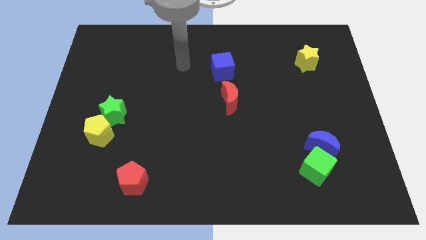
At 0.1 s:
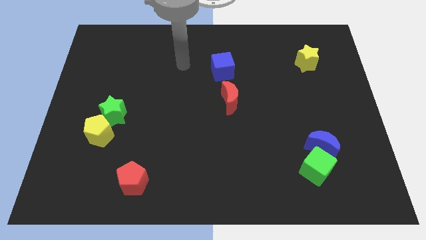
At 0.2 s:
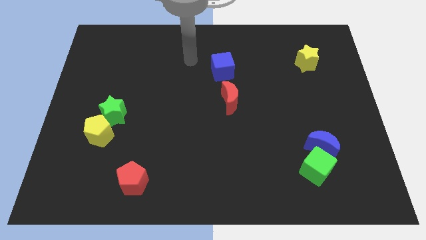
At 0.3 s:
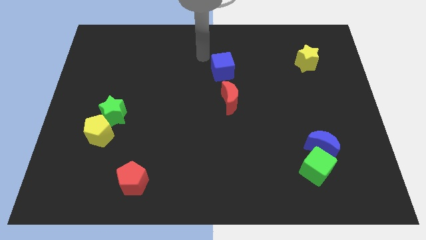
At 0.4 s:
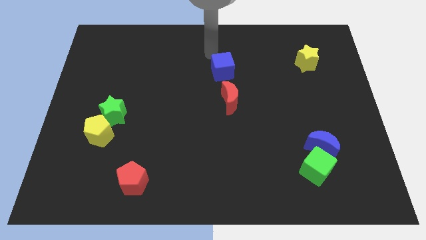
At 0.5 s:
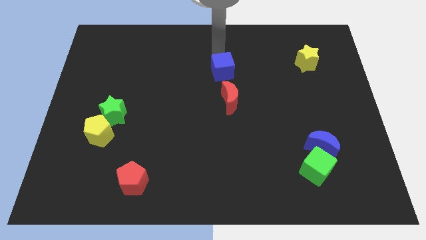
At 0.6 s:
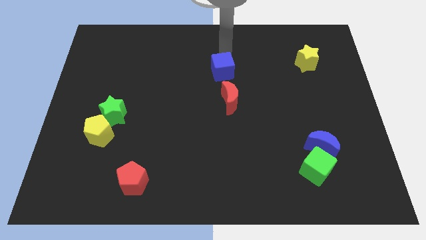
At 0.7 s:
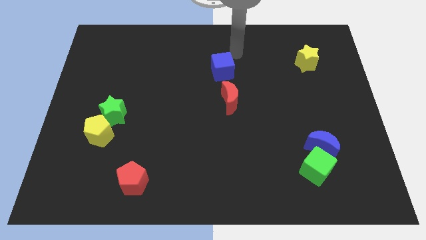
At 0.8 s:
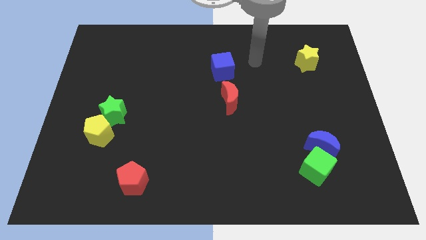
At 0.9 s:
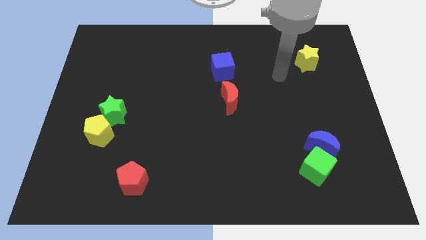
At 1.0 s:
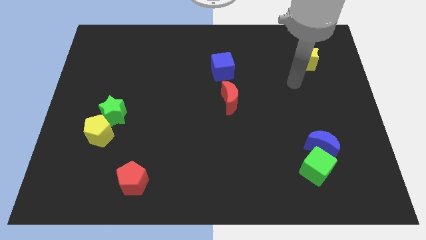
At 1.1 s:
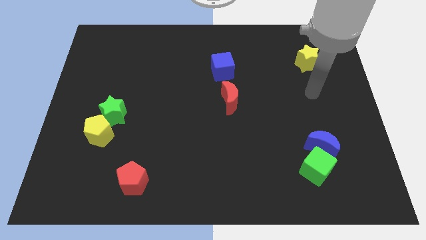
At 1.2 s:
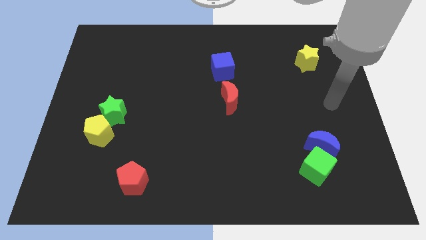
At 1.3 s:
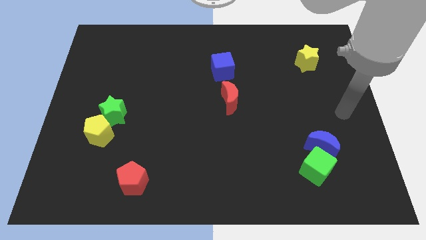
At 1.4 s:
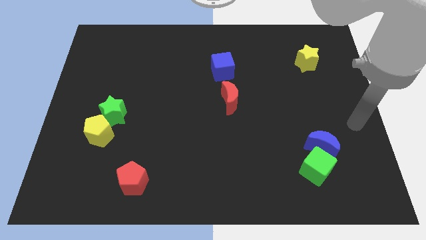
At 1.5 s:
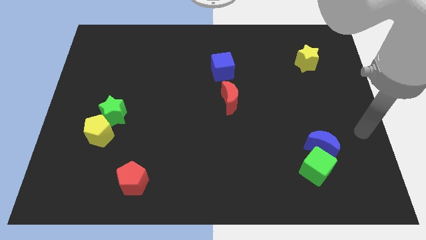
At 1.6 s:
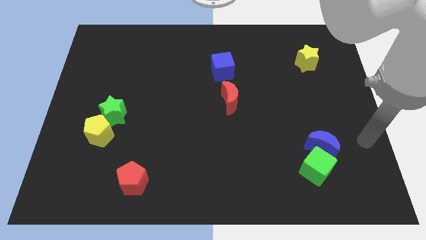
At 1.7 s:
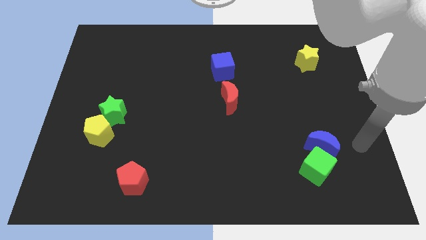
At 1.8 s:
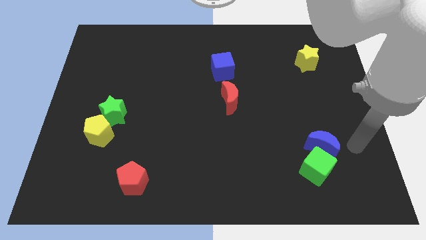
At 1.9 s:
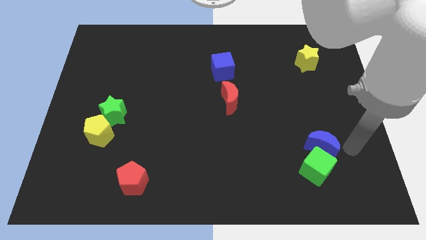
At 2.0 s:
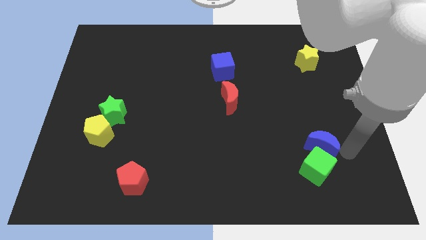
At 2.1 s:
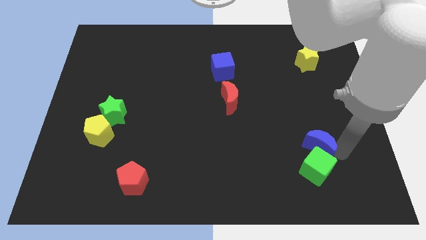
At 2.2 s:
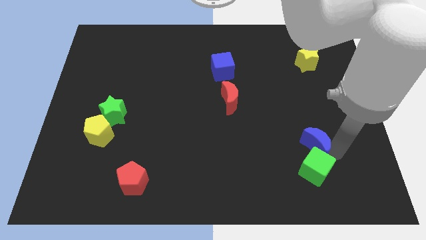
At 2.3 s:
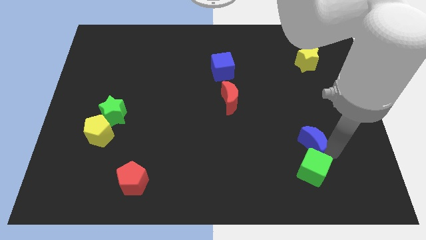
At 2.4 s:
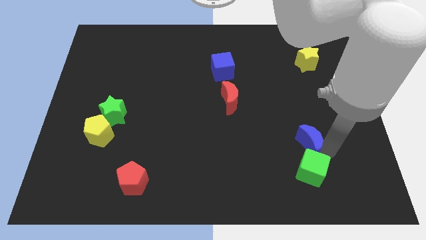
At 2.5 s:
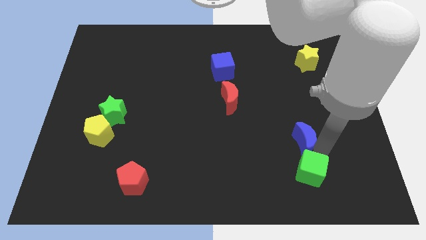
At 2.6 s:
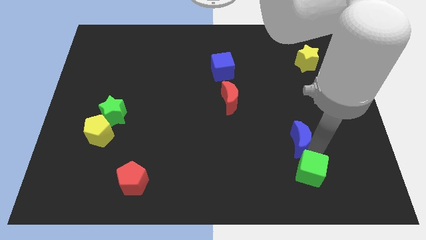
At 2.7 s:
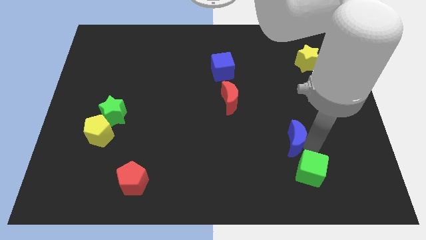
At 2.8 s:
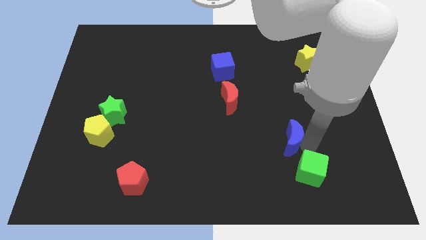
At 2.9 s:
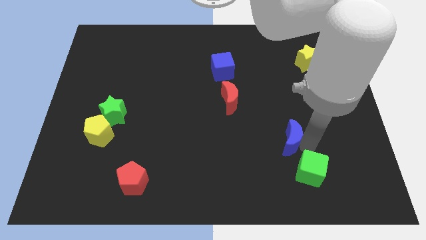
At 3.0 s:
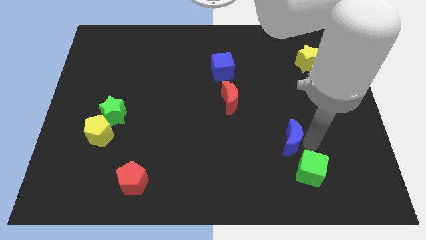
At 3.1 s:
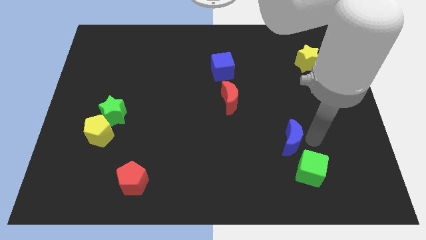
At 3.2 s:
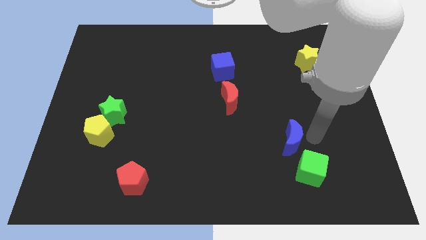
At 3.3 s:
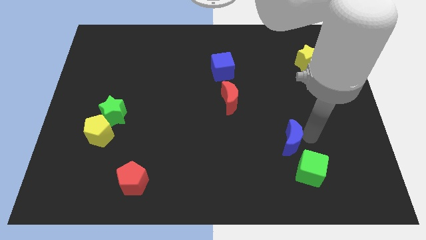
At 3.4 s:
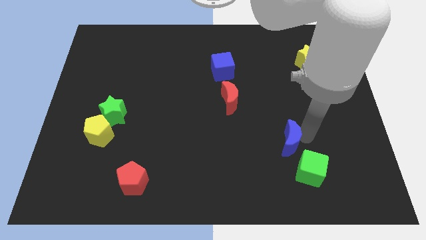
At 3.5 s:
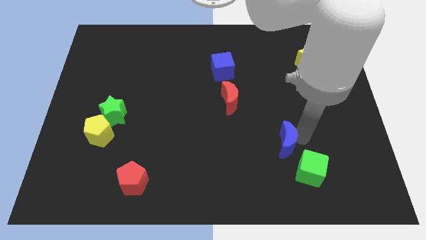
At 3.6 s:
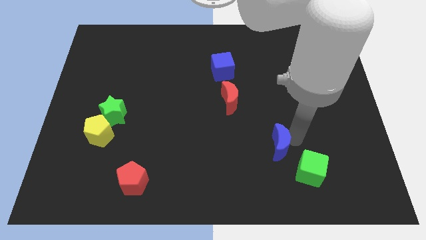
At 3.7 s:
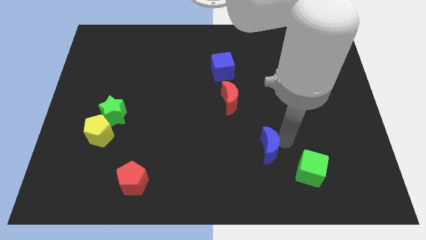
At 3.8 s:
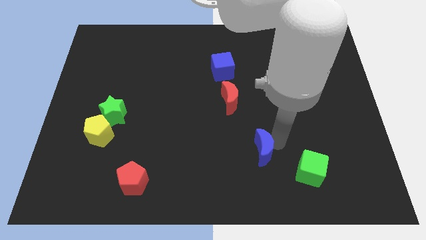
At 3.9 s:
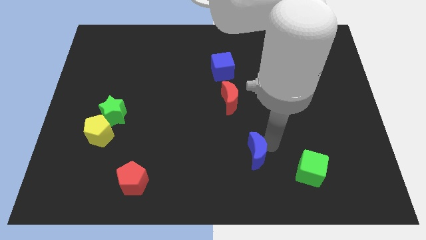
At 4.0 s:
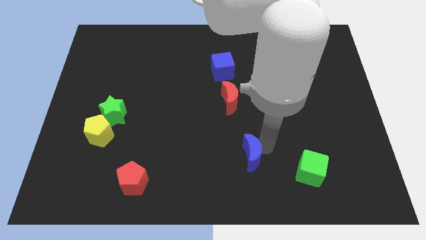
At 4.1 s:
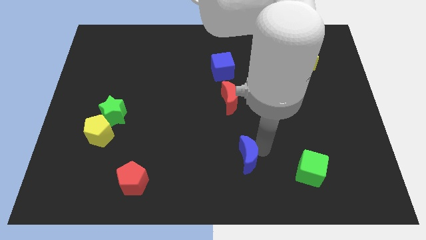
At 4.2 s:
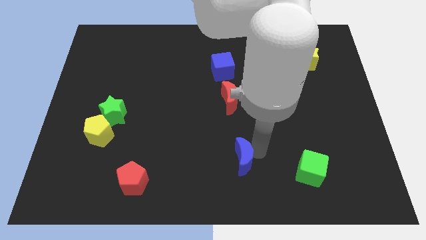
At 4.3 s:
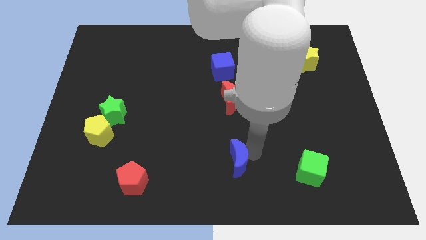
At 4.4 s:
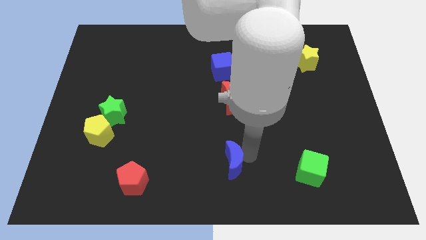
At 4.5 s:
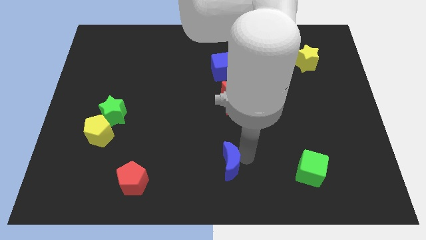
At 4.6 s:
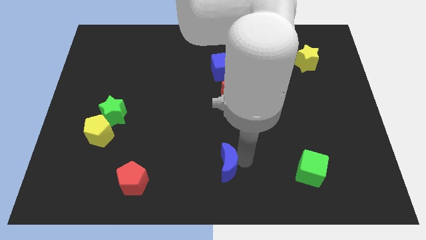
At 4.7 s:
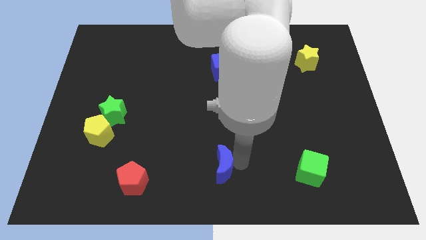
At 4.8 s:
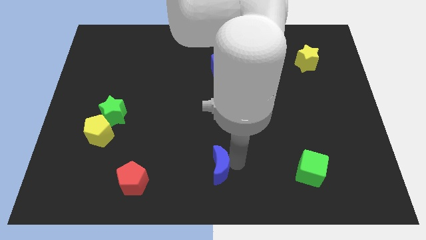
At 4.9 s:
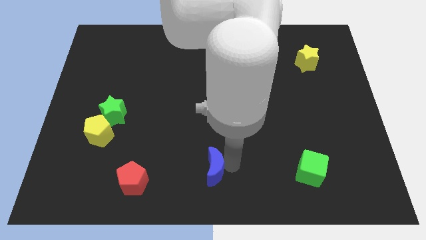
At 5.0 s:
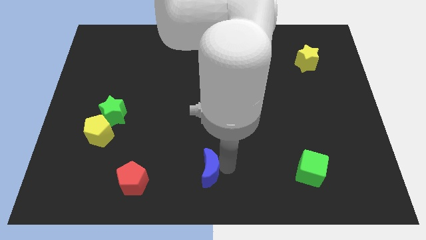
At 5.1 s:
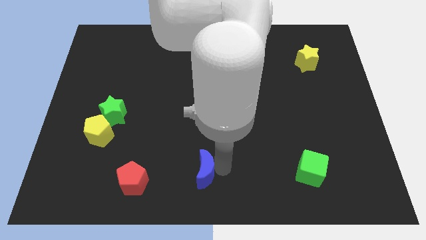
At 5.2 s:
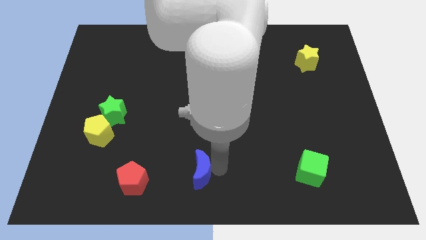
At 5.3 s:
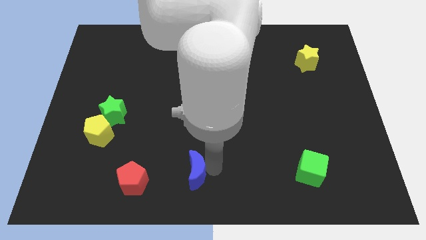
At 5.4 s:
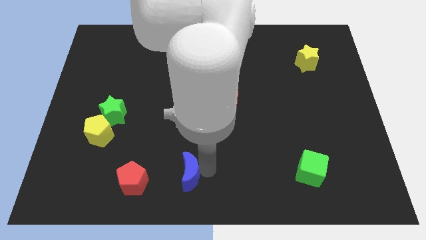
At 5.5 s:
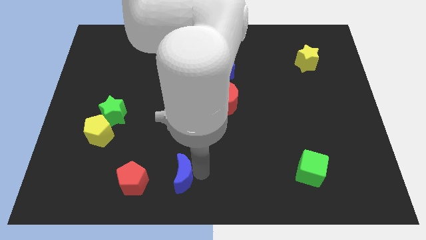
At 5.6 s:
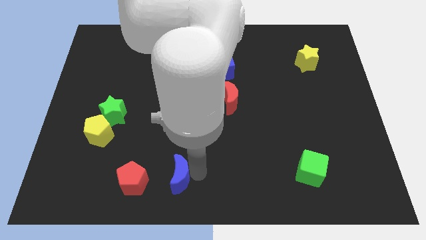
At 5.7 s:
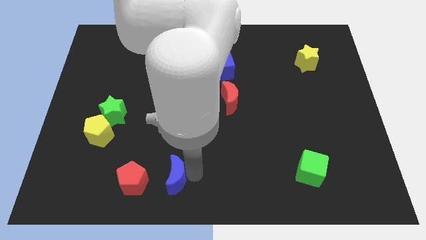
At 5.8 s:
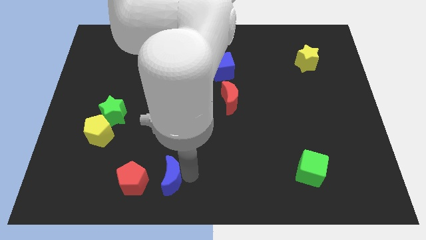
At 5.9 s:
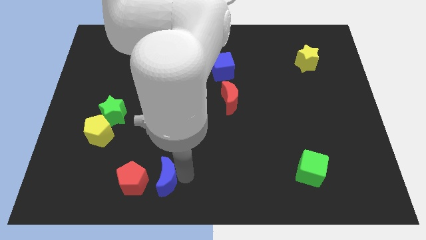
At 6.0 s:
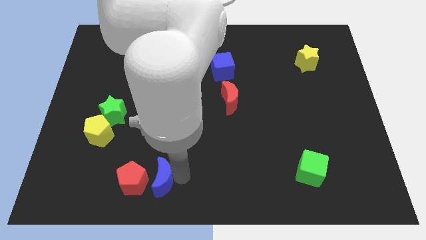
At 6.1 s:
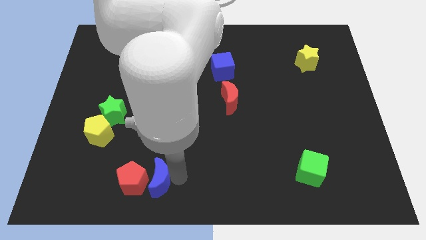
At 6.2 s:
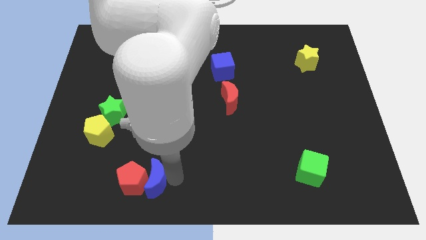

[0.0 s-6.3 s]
slide the blue moon to the red pentagon

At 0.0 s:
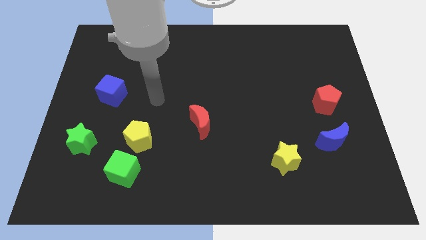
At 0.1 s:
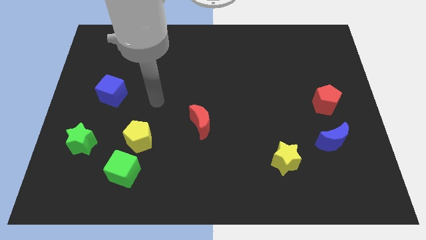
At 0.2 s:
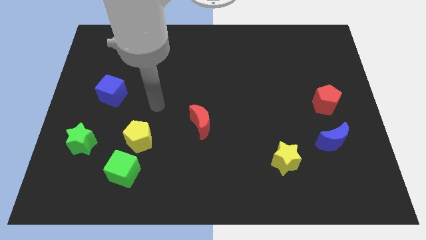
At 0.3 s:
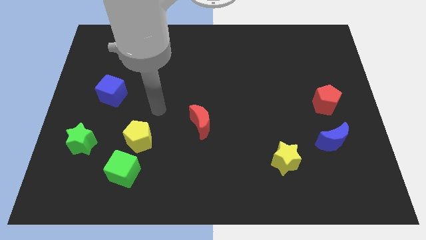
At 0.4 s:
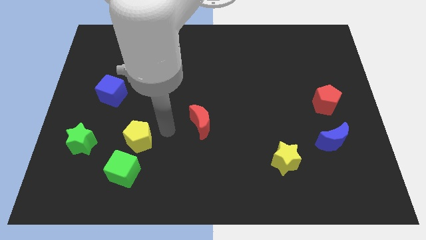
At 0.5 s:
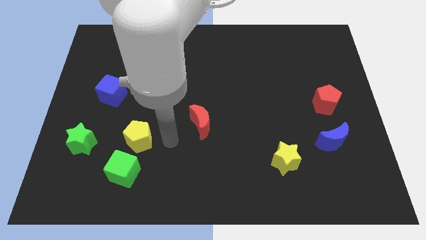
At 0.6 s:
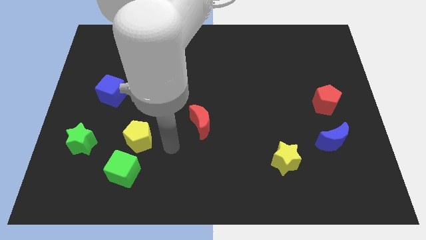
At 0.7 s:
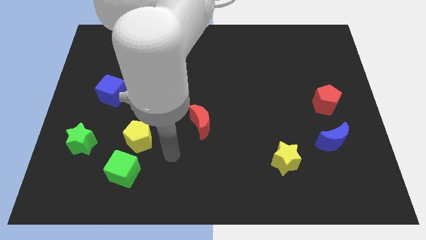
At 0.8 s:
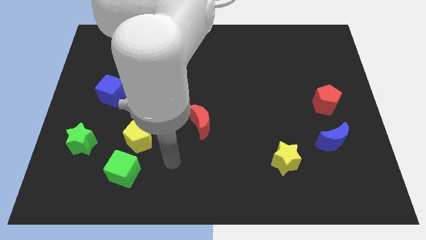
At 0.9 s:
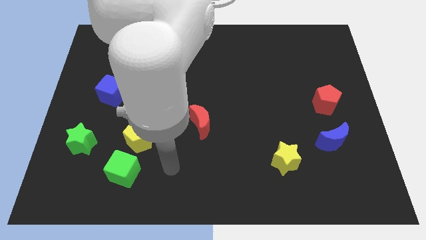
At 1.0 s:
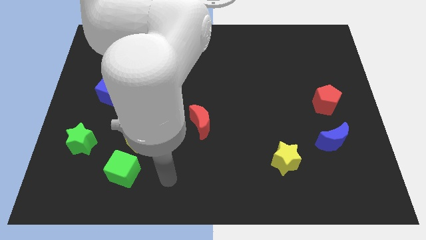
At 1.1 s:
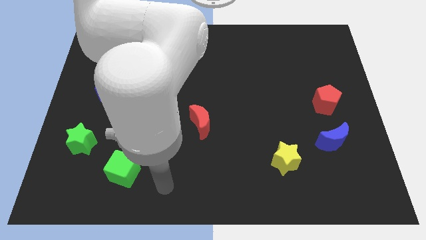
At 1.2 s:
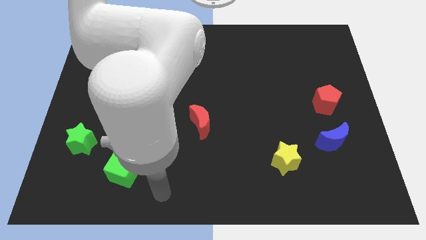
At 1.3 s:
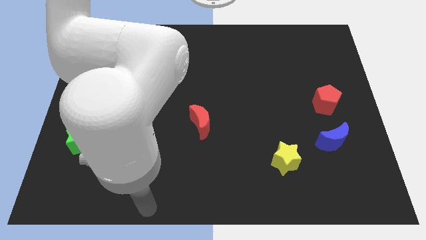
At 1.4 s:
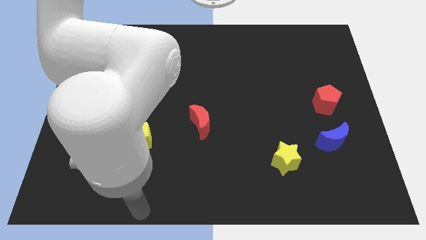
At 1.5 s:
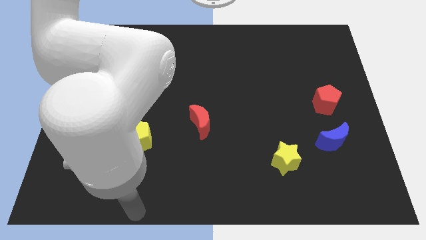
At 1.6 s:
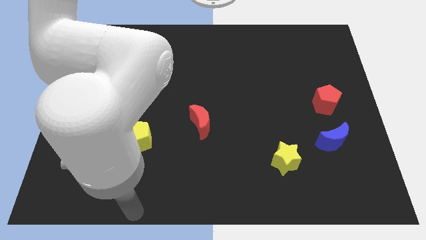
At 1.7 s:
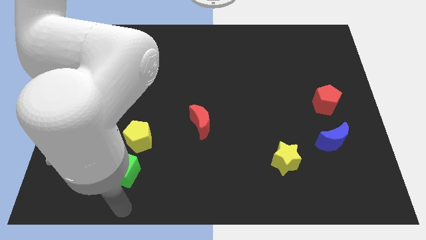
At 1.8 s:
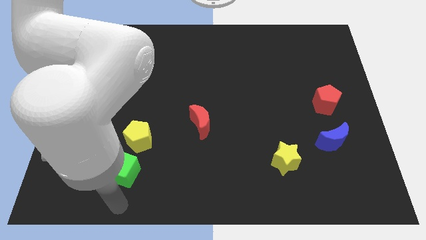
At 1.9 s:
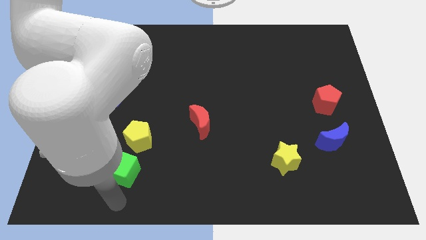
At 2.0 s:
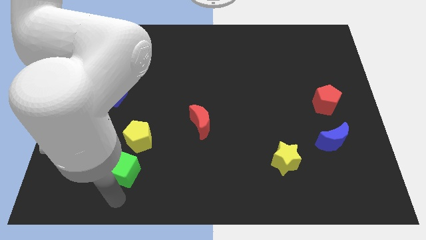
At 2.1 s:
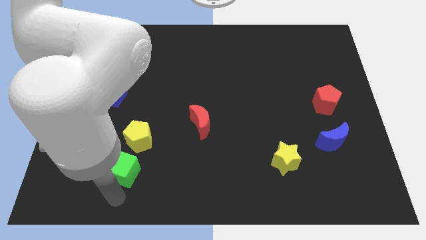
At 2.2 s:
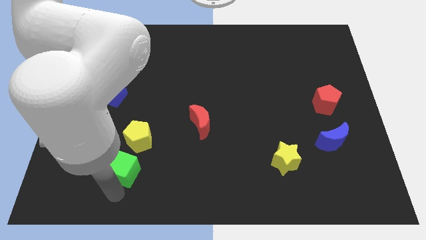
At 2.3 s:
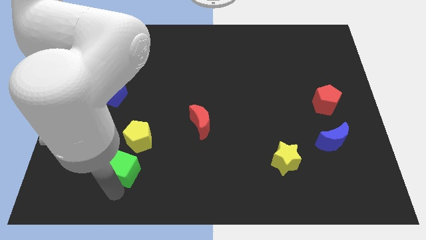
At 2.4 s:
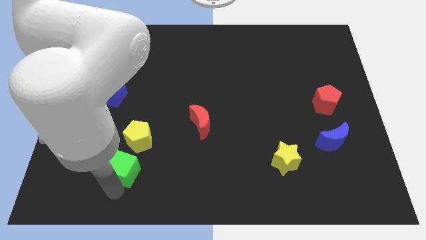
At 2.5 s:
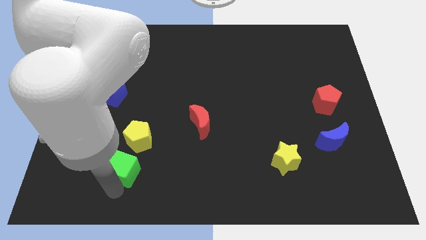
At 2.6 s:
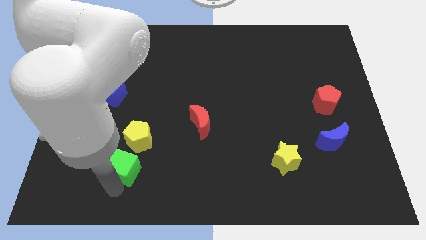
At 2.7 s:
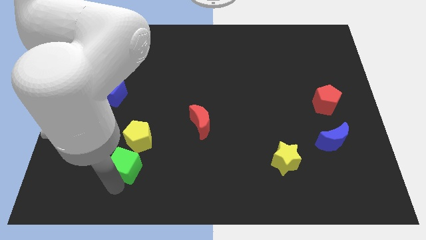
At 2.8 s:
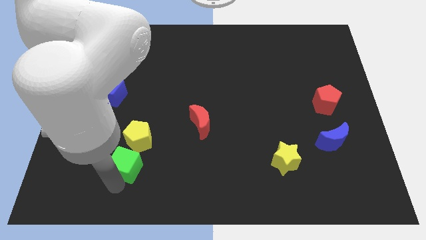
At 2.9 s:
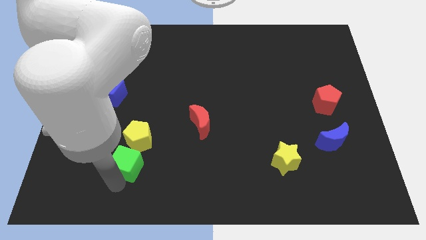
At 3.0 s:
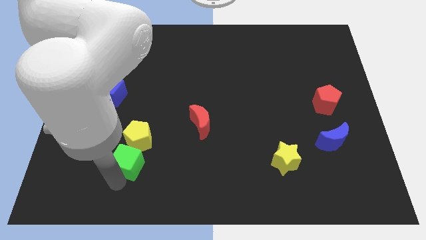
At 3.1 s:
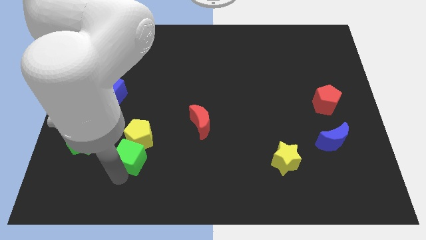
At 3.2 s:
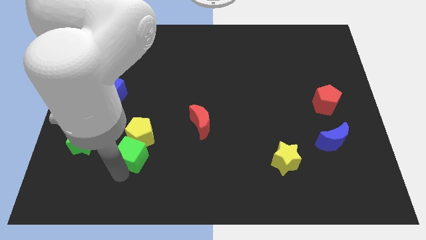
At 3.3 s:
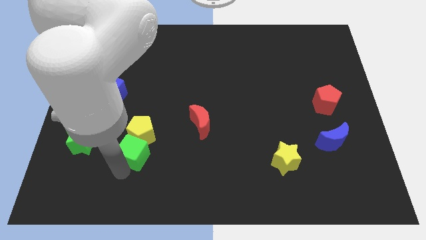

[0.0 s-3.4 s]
push the green cube close to the yellow pentagon
